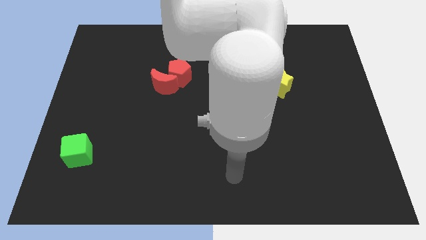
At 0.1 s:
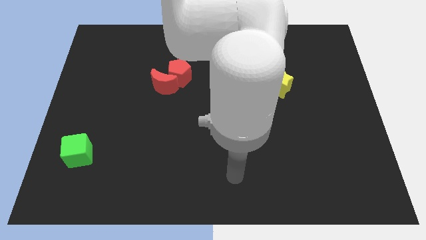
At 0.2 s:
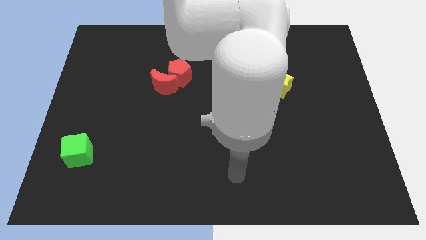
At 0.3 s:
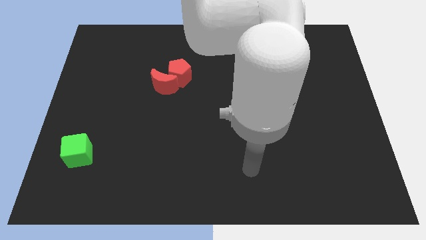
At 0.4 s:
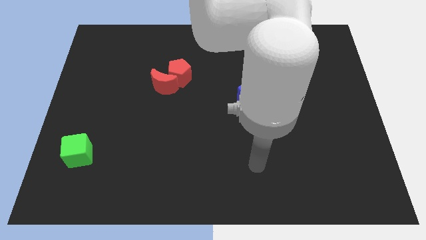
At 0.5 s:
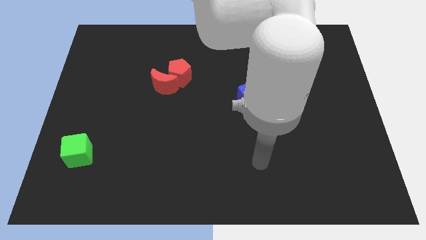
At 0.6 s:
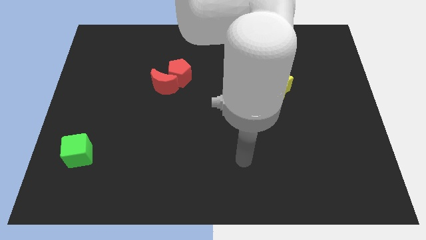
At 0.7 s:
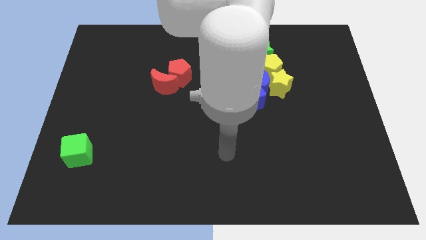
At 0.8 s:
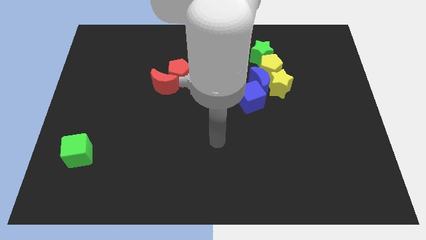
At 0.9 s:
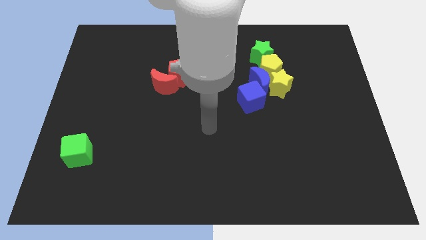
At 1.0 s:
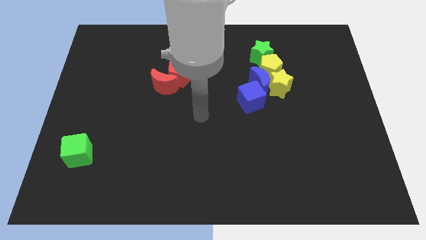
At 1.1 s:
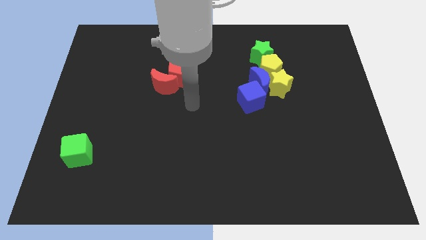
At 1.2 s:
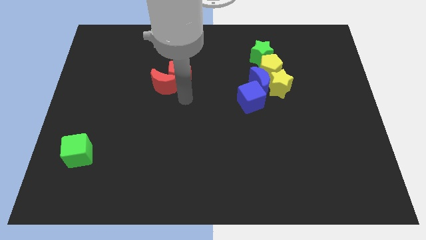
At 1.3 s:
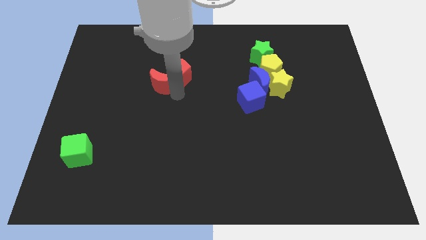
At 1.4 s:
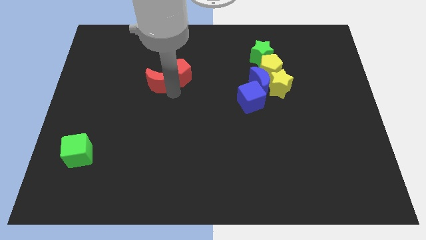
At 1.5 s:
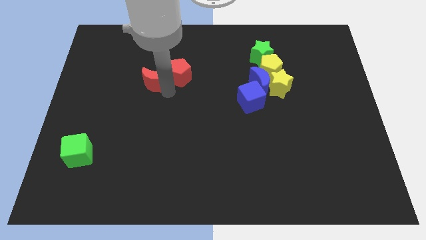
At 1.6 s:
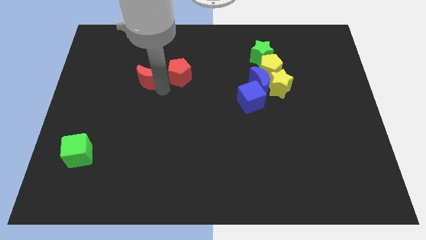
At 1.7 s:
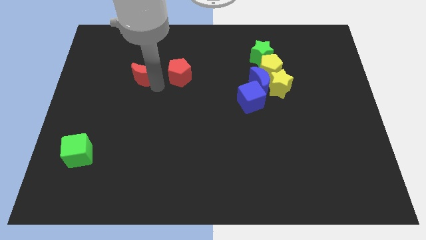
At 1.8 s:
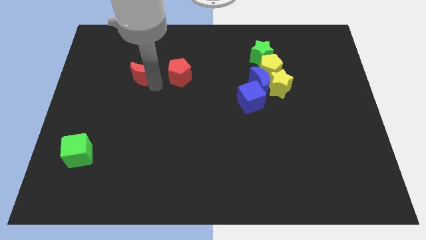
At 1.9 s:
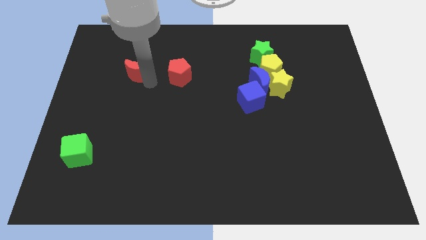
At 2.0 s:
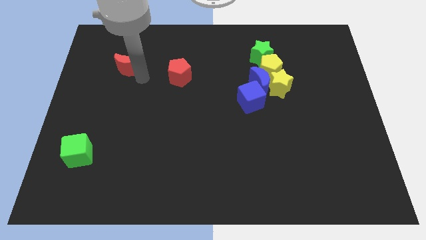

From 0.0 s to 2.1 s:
separate the red moon from the red pentagon

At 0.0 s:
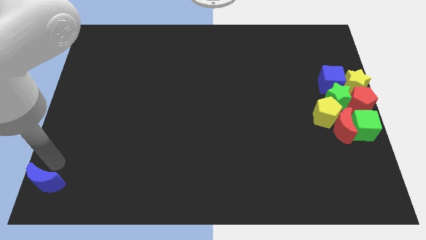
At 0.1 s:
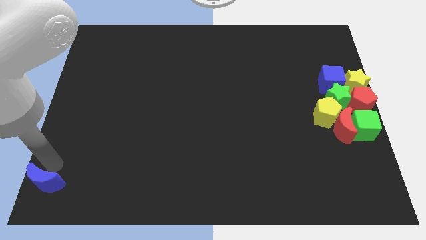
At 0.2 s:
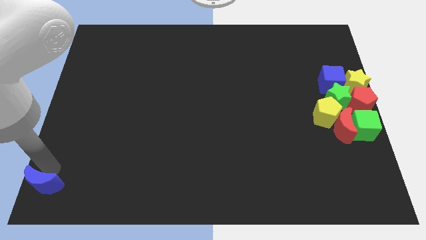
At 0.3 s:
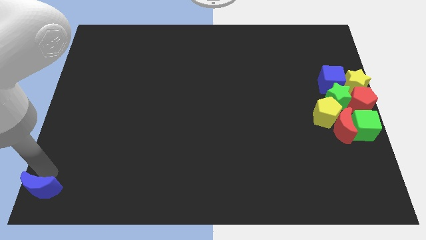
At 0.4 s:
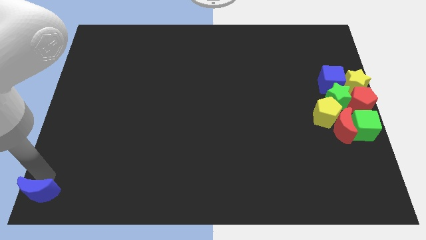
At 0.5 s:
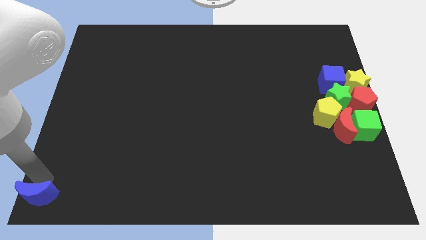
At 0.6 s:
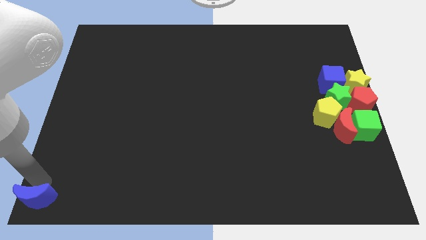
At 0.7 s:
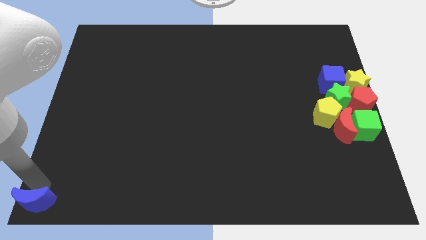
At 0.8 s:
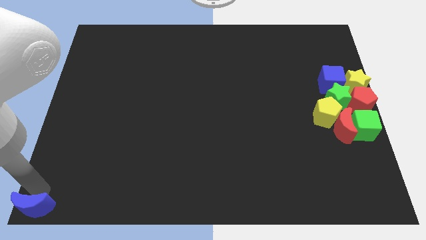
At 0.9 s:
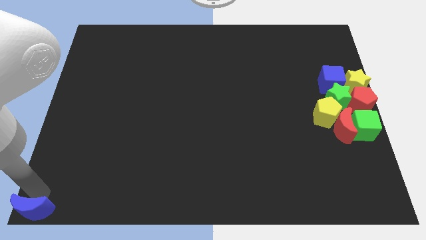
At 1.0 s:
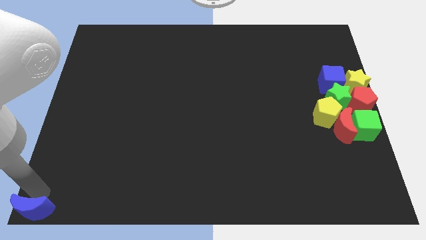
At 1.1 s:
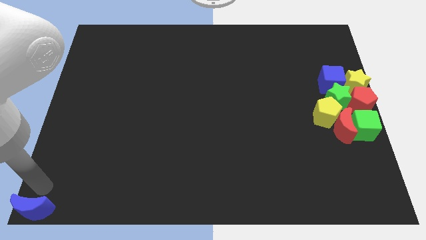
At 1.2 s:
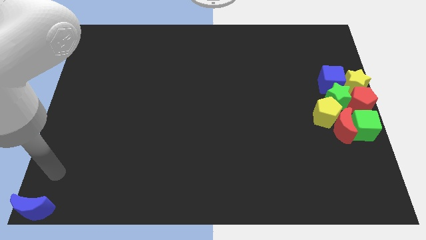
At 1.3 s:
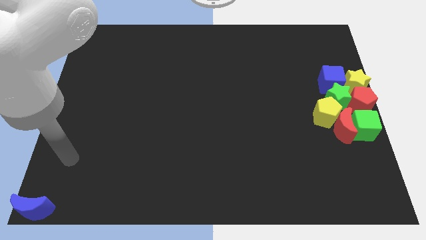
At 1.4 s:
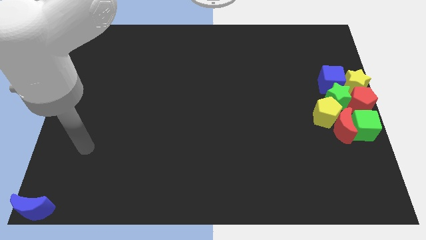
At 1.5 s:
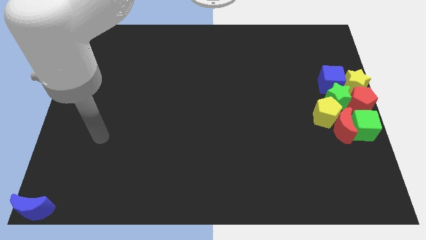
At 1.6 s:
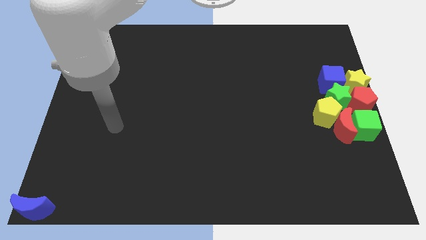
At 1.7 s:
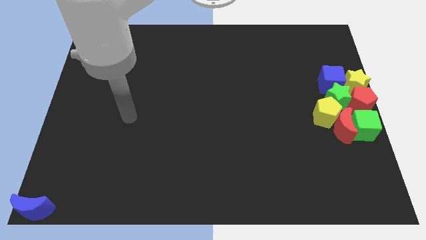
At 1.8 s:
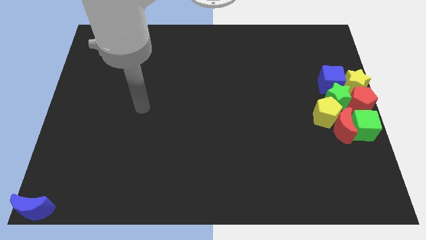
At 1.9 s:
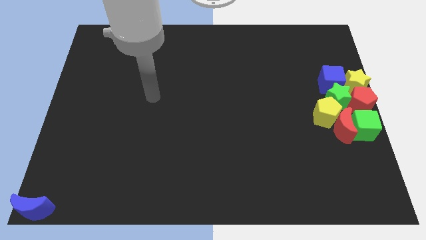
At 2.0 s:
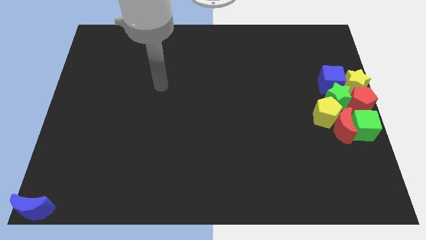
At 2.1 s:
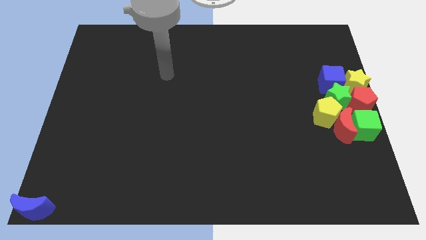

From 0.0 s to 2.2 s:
push the blue crescent towards the bottom left of the board

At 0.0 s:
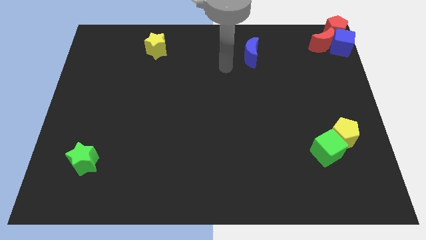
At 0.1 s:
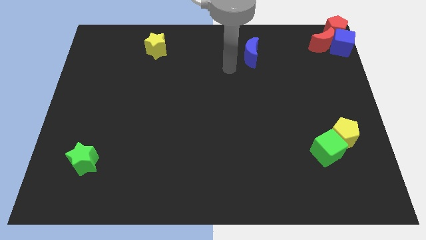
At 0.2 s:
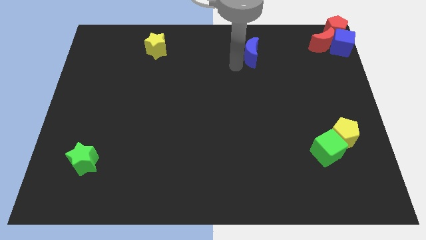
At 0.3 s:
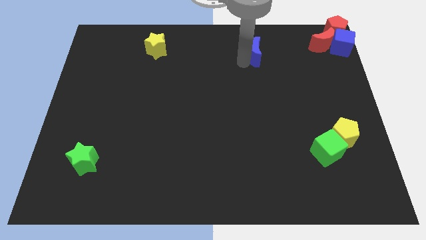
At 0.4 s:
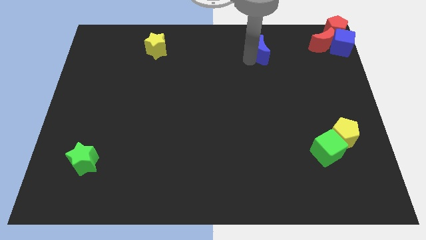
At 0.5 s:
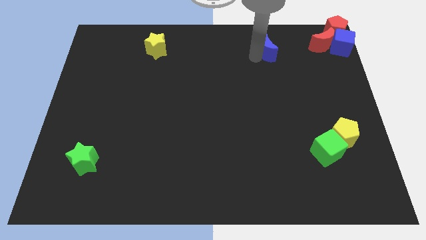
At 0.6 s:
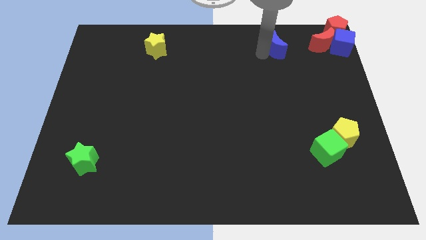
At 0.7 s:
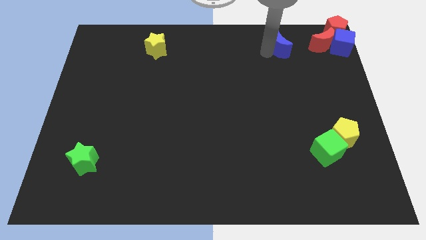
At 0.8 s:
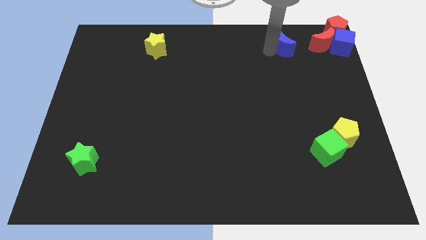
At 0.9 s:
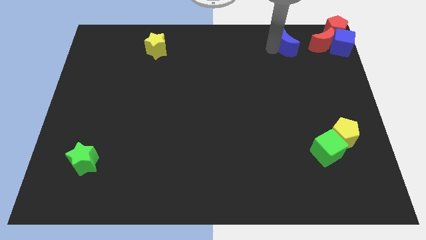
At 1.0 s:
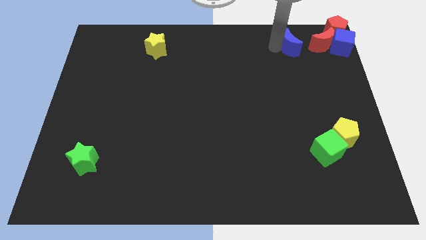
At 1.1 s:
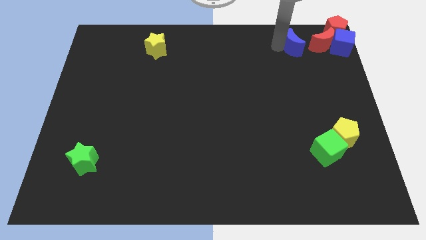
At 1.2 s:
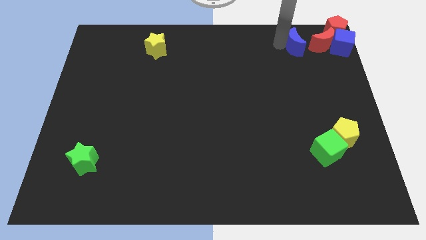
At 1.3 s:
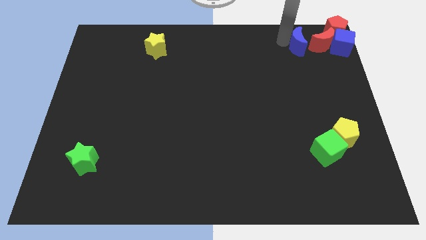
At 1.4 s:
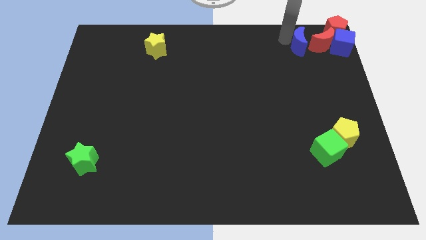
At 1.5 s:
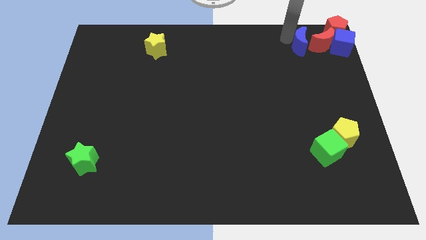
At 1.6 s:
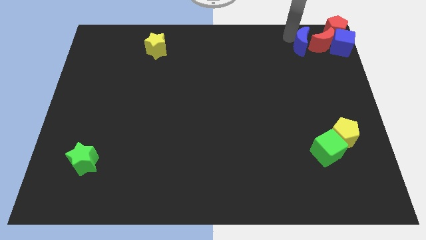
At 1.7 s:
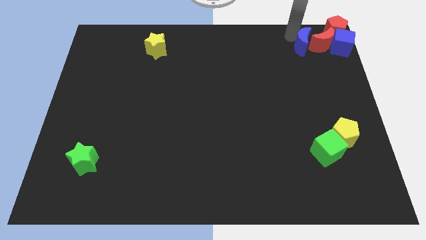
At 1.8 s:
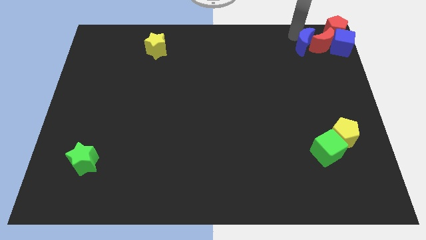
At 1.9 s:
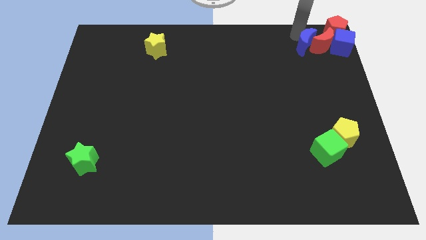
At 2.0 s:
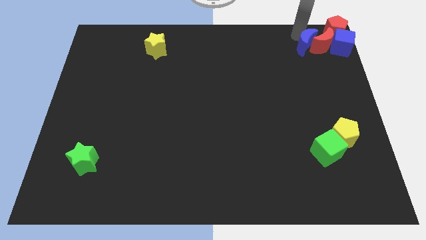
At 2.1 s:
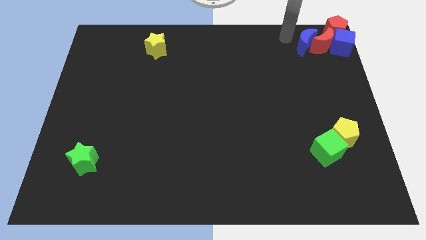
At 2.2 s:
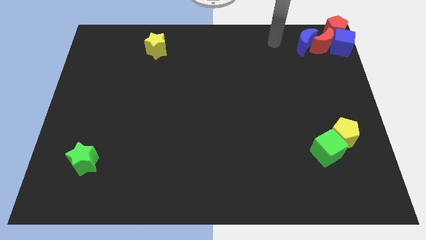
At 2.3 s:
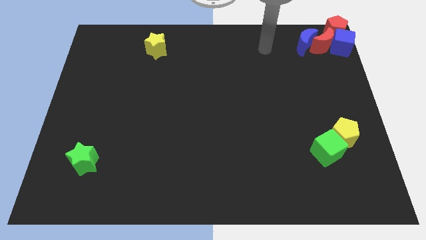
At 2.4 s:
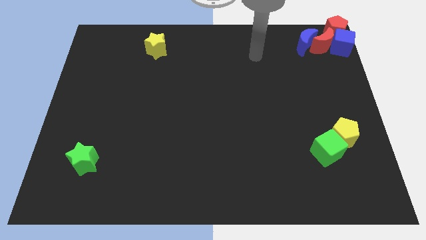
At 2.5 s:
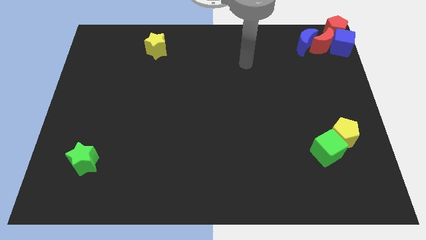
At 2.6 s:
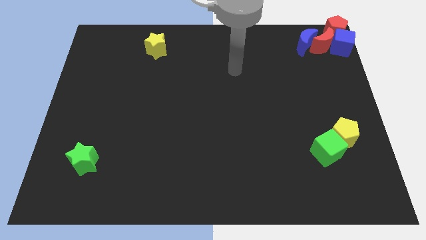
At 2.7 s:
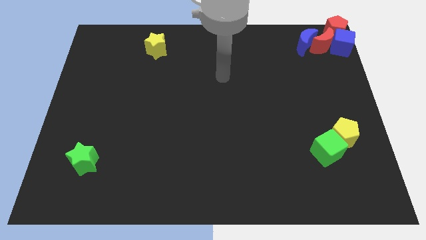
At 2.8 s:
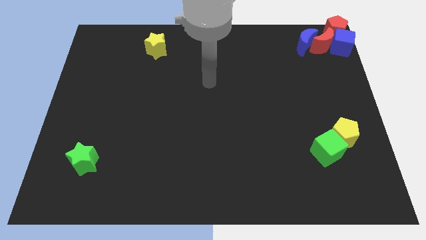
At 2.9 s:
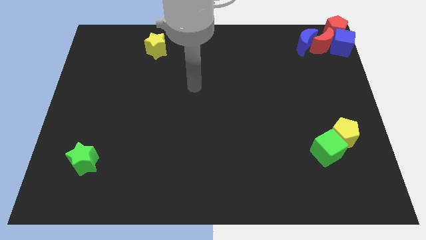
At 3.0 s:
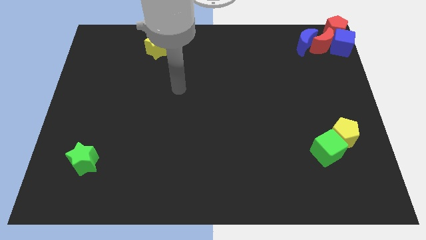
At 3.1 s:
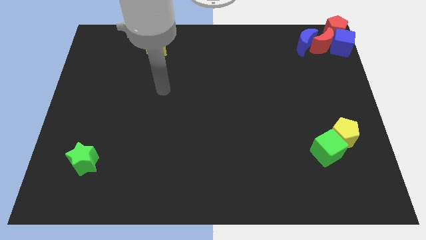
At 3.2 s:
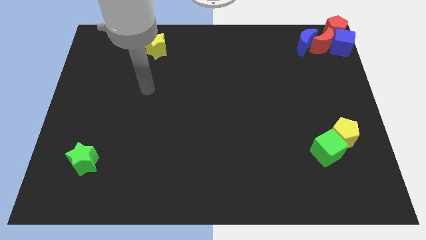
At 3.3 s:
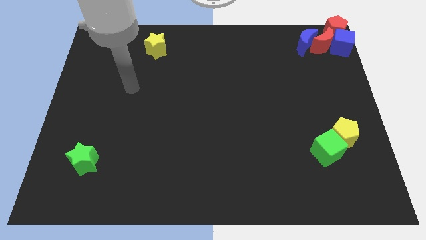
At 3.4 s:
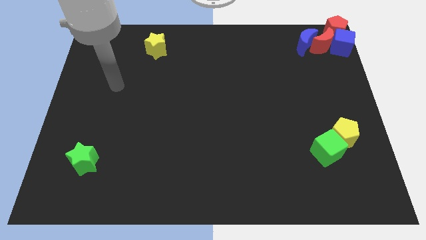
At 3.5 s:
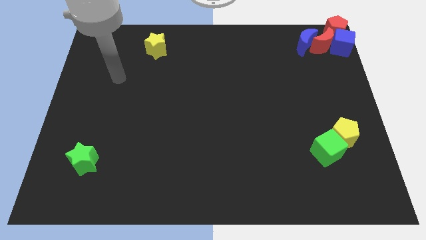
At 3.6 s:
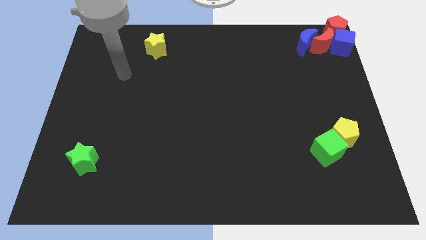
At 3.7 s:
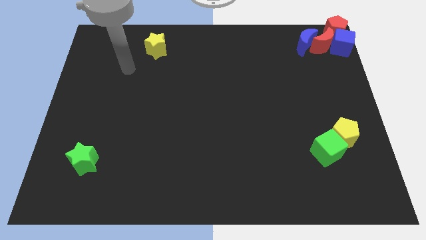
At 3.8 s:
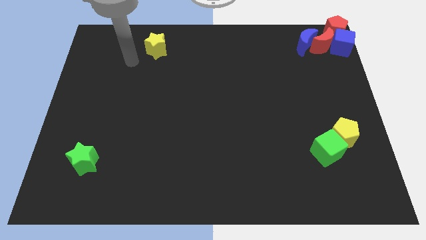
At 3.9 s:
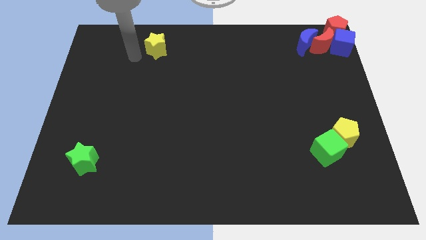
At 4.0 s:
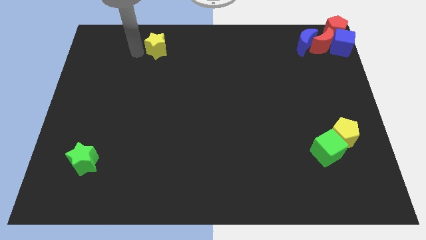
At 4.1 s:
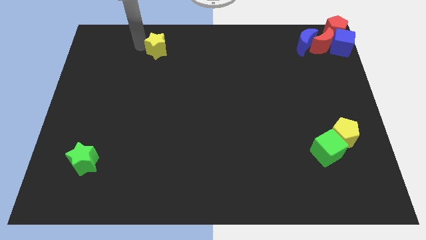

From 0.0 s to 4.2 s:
move your arm towards the yellow star

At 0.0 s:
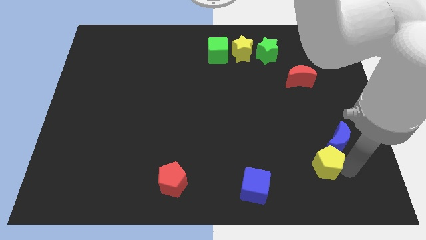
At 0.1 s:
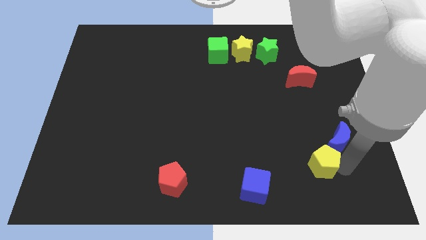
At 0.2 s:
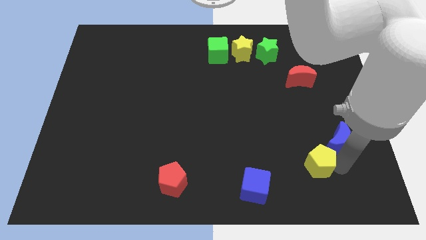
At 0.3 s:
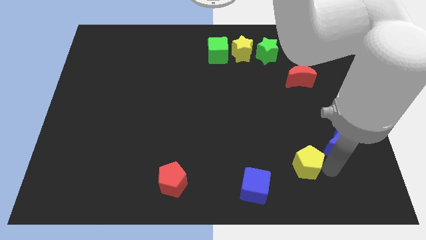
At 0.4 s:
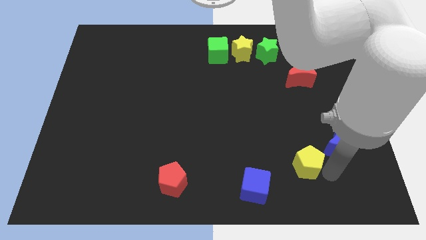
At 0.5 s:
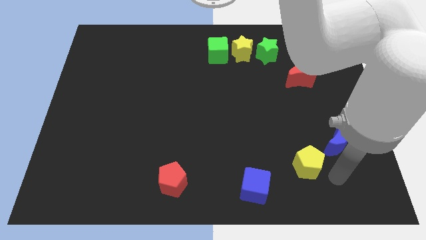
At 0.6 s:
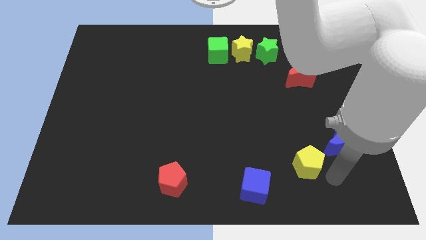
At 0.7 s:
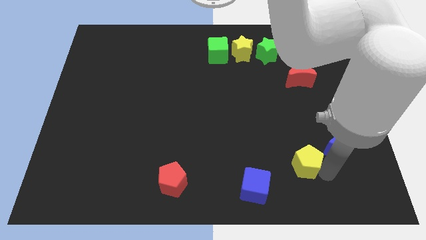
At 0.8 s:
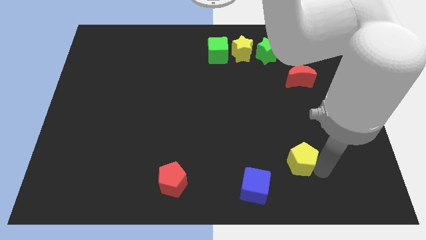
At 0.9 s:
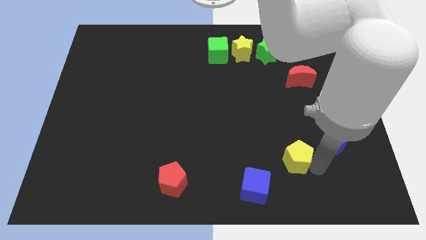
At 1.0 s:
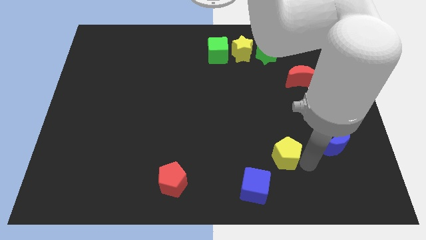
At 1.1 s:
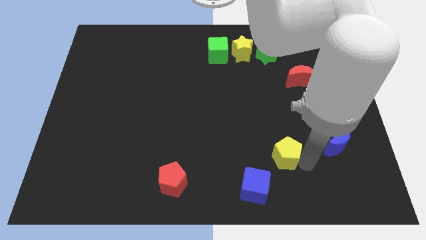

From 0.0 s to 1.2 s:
move the yellow pentagon slightly to the left side of the board
